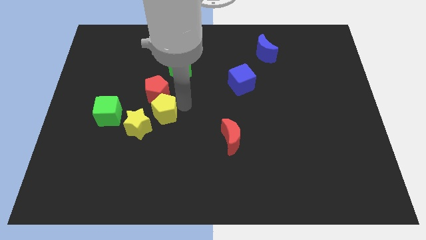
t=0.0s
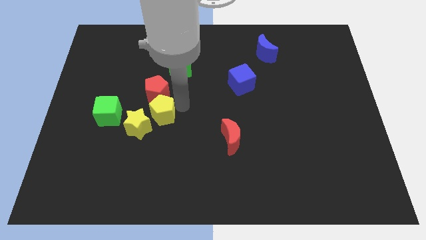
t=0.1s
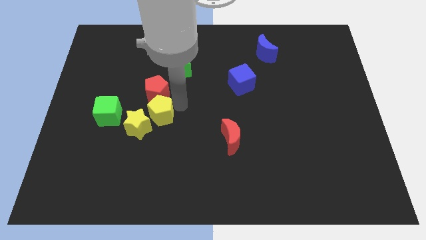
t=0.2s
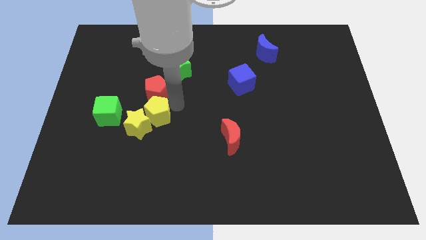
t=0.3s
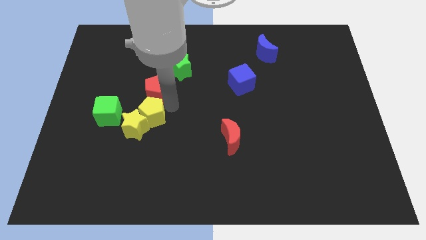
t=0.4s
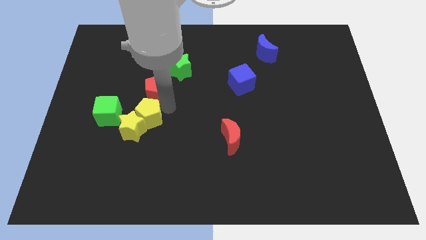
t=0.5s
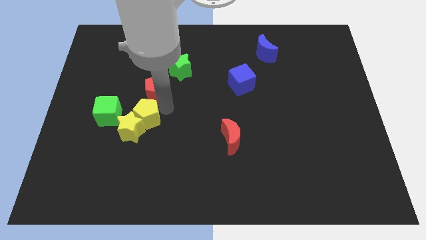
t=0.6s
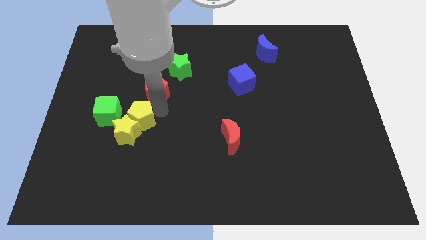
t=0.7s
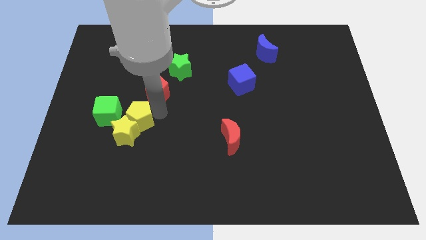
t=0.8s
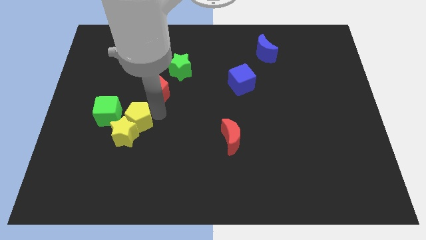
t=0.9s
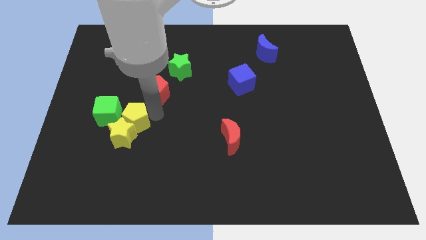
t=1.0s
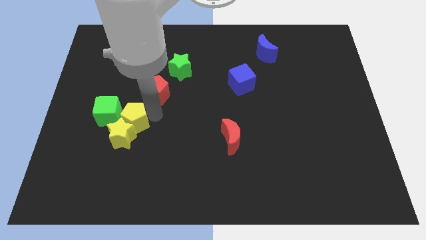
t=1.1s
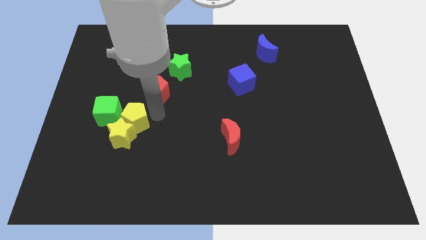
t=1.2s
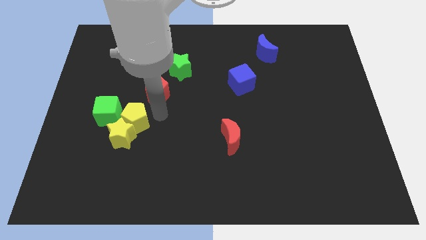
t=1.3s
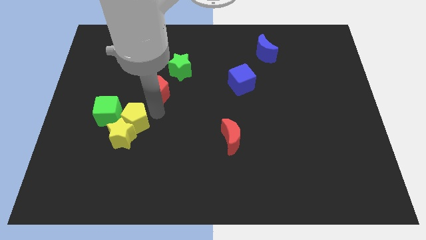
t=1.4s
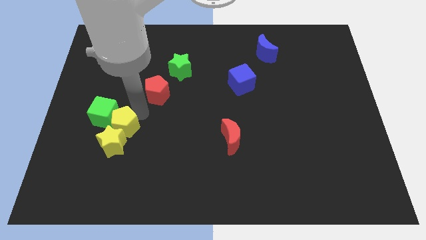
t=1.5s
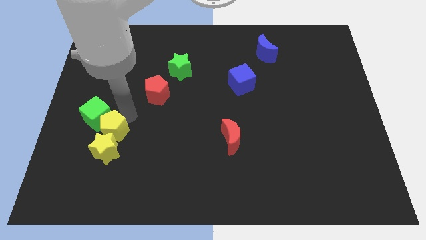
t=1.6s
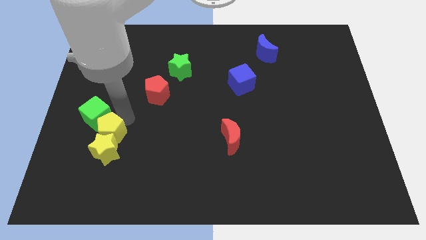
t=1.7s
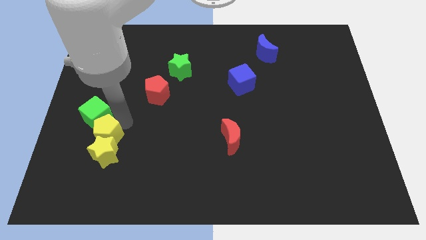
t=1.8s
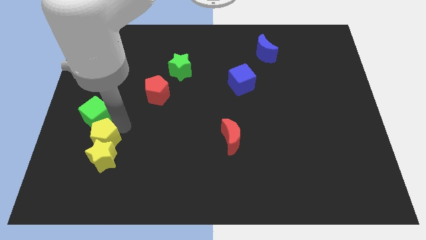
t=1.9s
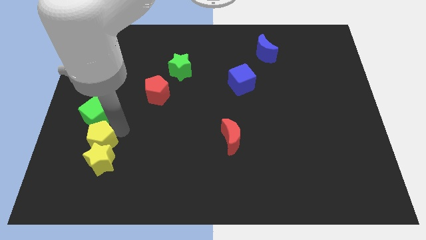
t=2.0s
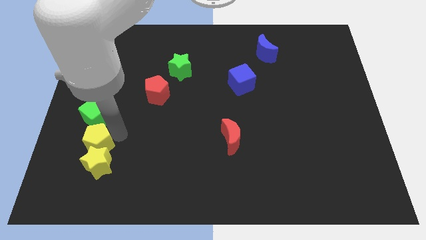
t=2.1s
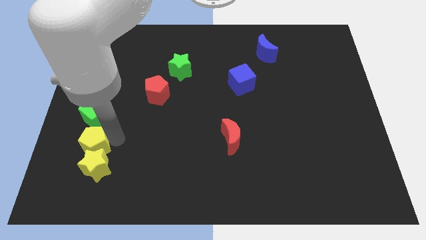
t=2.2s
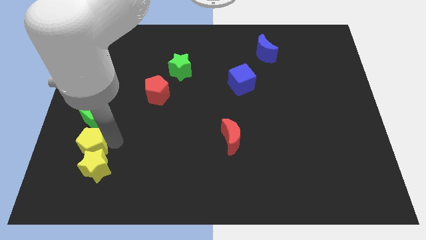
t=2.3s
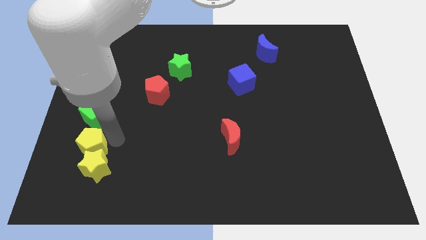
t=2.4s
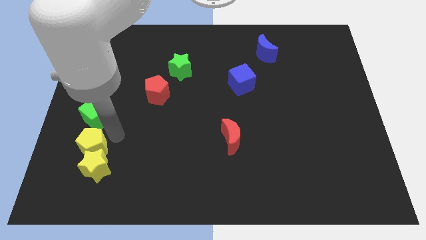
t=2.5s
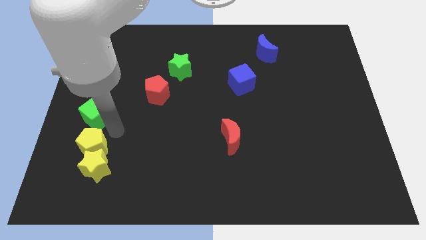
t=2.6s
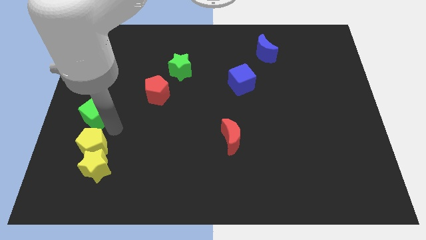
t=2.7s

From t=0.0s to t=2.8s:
push the yellow pentagon into yellow star

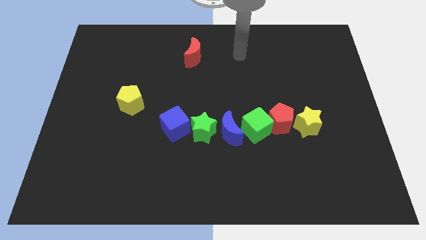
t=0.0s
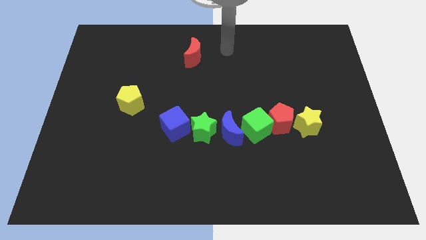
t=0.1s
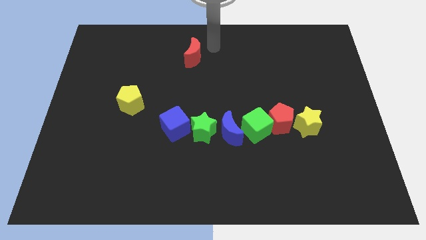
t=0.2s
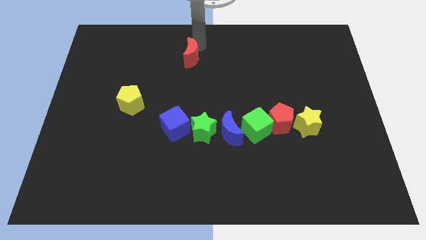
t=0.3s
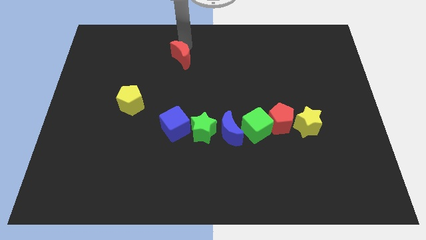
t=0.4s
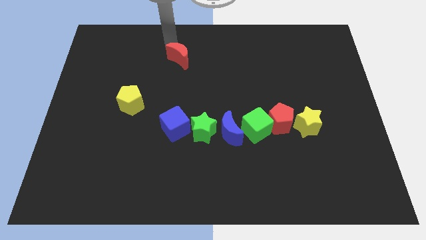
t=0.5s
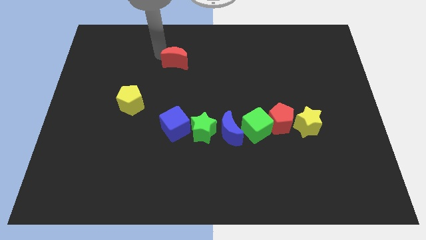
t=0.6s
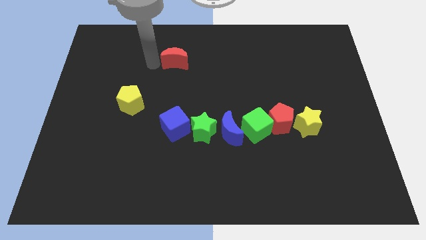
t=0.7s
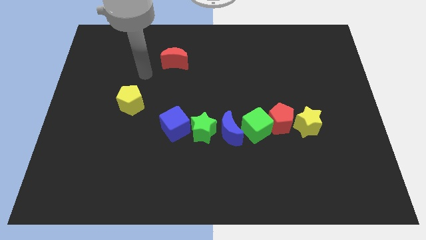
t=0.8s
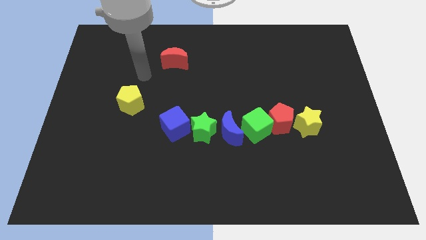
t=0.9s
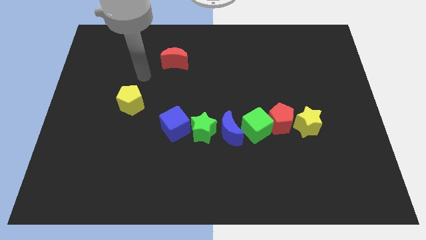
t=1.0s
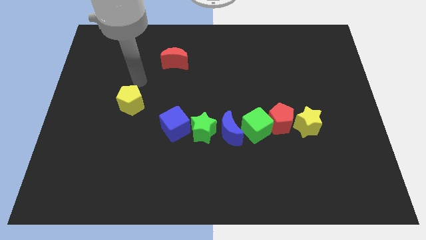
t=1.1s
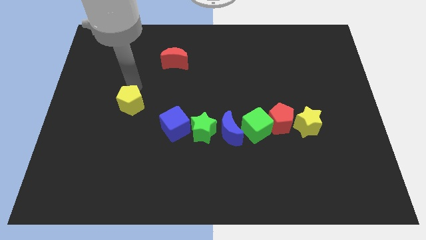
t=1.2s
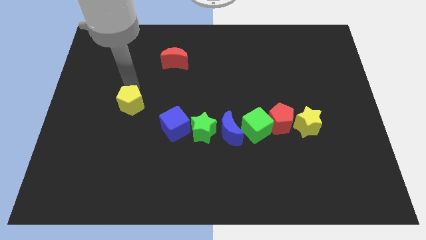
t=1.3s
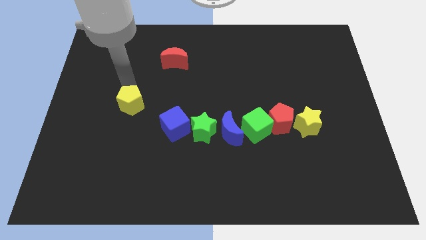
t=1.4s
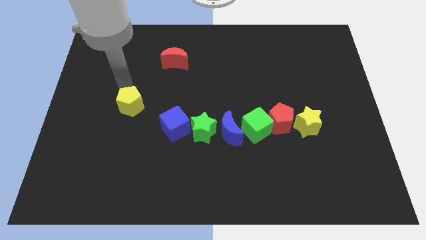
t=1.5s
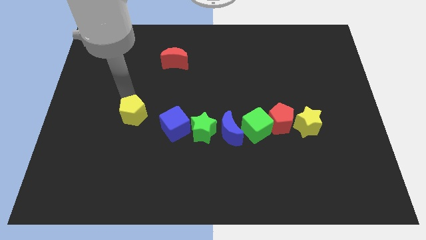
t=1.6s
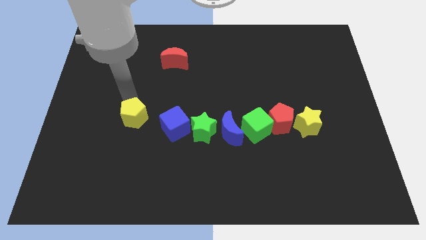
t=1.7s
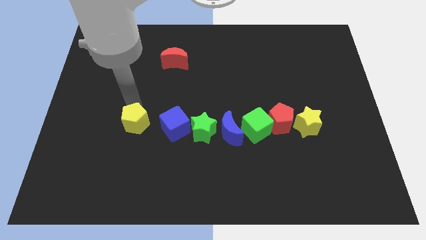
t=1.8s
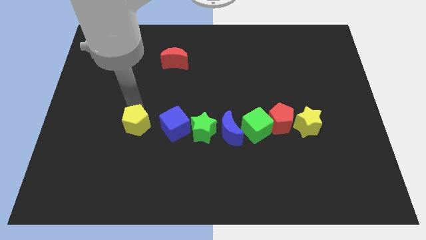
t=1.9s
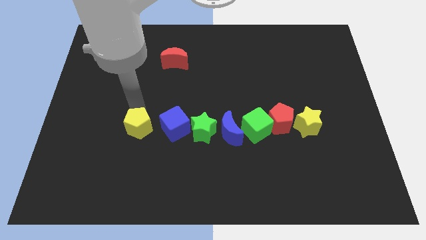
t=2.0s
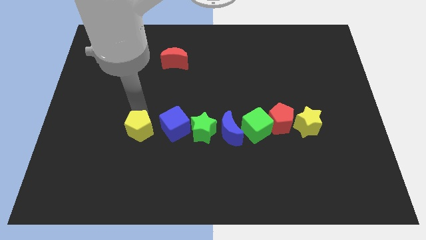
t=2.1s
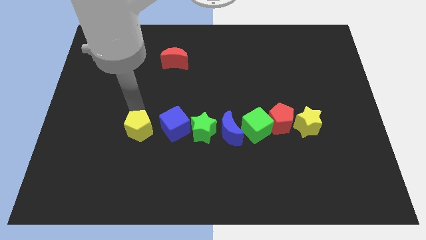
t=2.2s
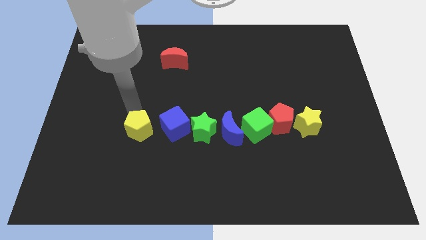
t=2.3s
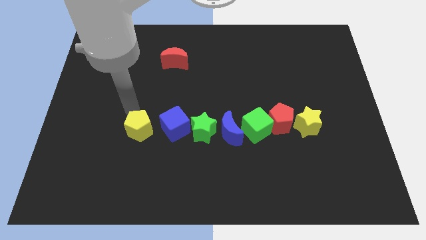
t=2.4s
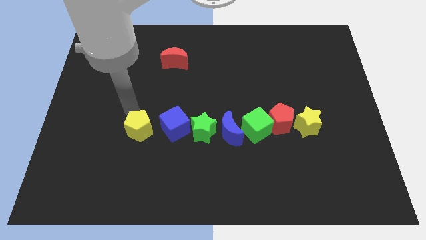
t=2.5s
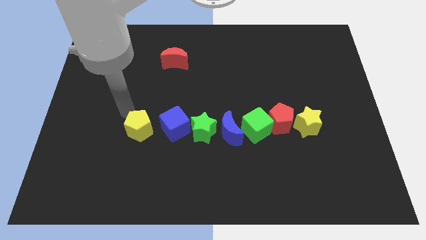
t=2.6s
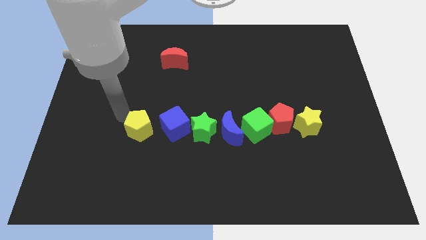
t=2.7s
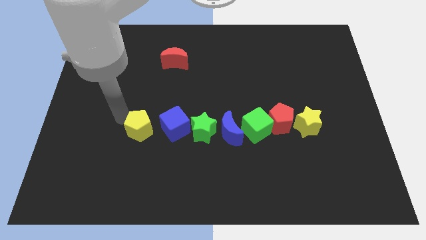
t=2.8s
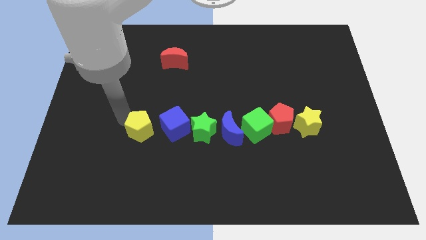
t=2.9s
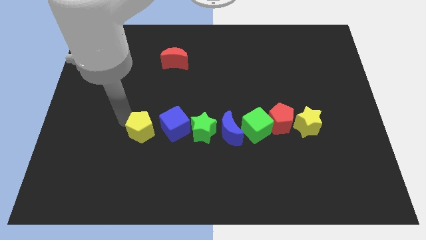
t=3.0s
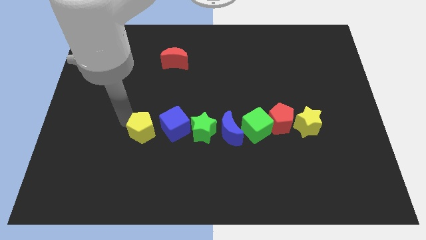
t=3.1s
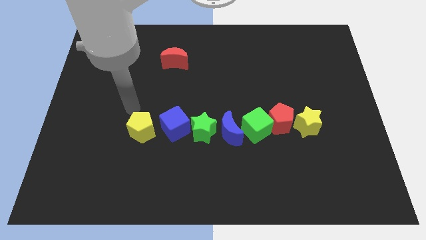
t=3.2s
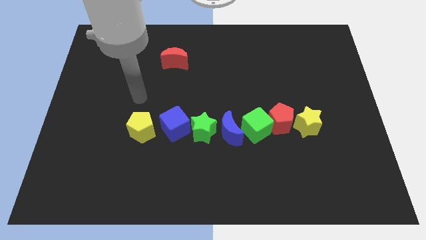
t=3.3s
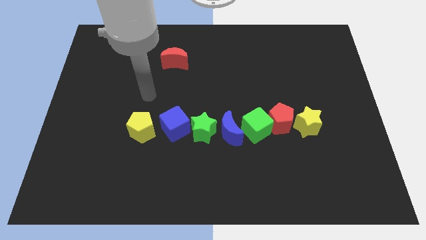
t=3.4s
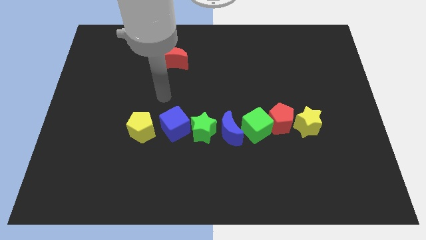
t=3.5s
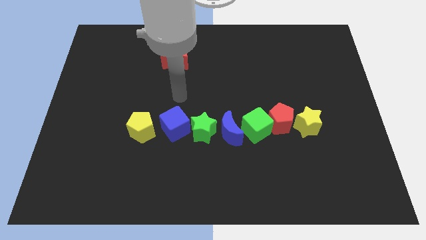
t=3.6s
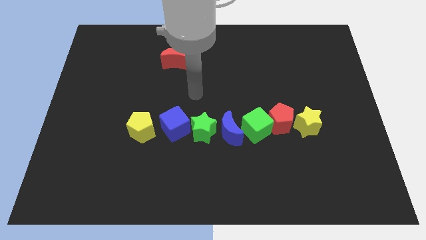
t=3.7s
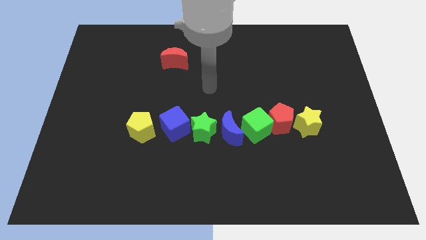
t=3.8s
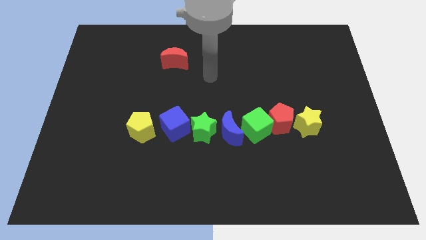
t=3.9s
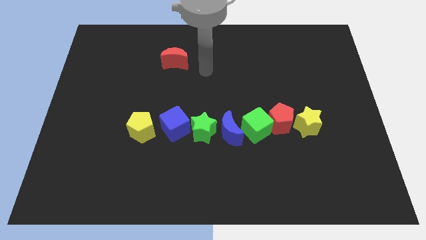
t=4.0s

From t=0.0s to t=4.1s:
place the yellow pentagon to the left of blue cube

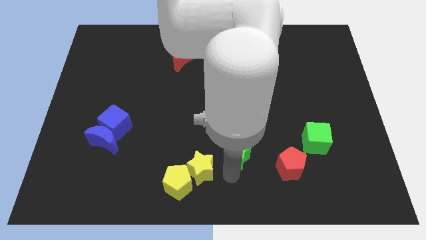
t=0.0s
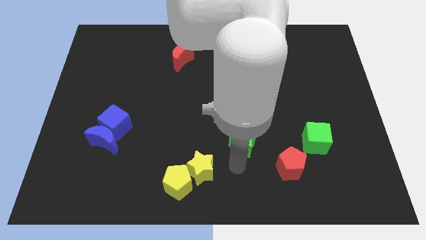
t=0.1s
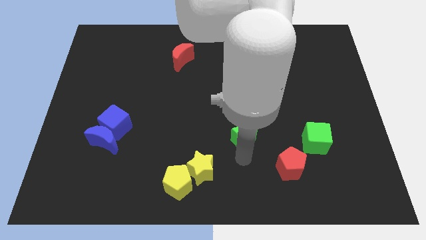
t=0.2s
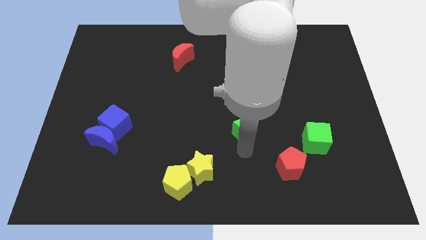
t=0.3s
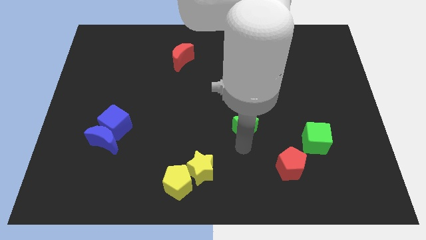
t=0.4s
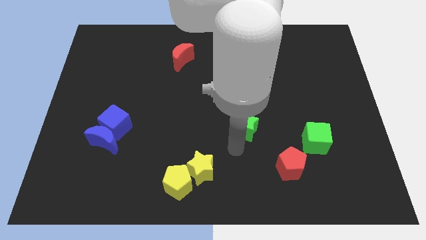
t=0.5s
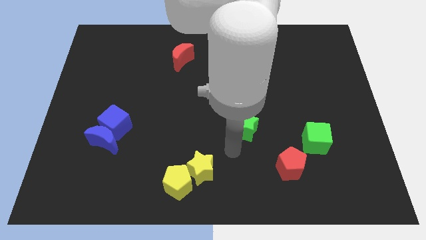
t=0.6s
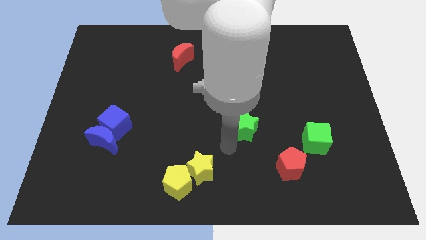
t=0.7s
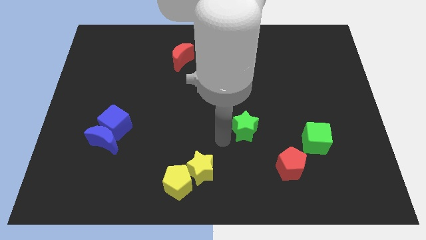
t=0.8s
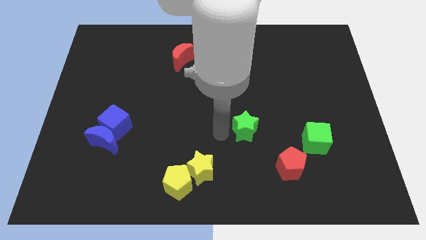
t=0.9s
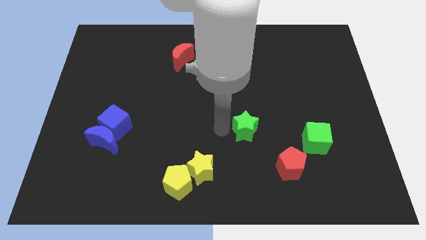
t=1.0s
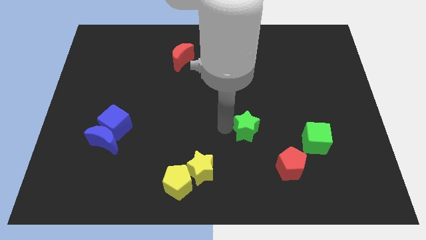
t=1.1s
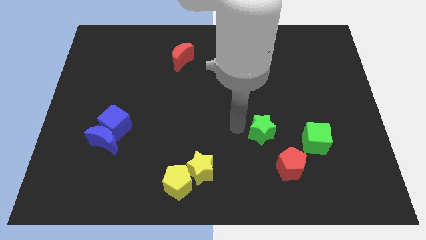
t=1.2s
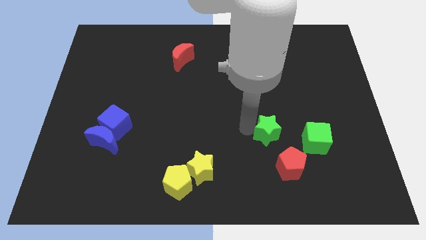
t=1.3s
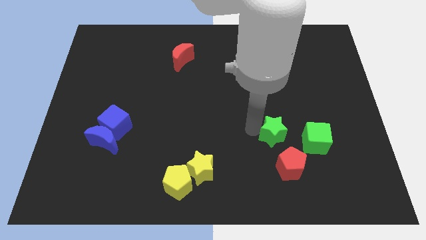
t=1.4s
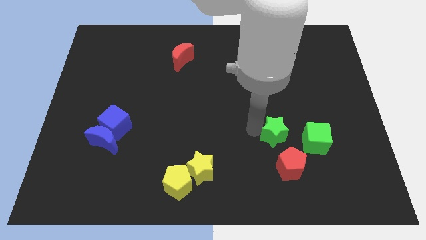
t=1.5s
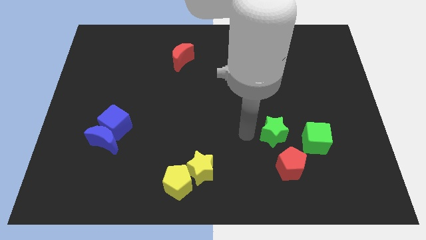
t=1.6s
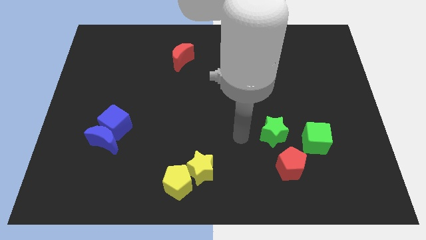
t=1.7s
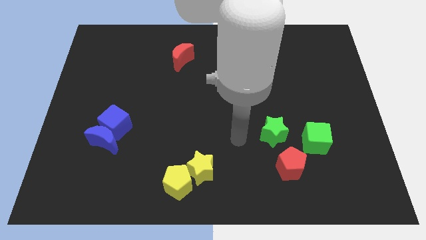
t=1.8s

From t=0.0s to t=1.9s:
place the green star adjacent to the green cube

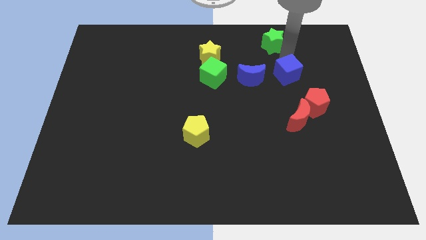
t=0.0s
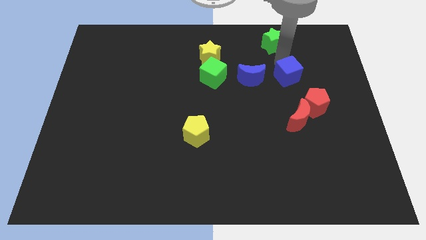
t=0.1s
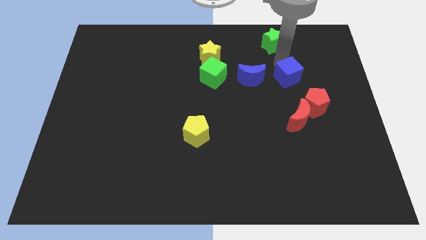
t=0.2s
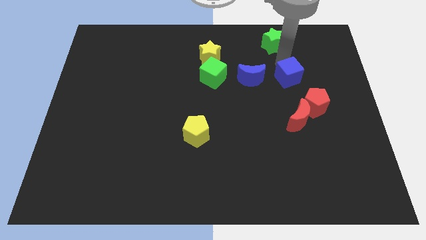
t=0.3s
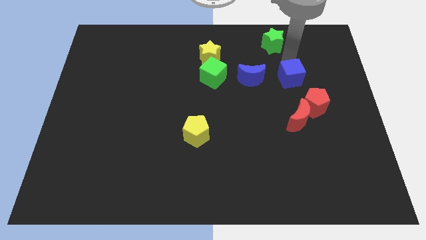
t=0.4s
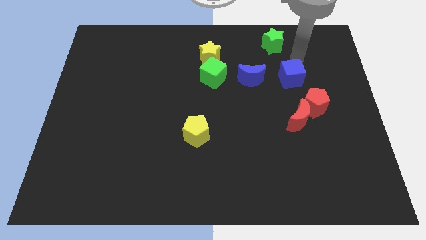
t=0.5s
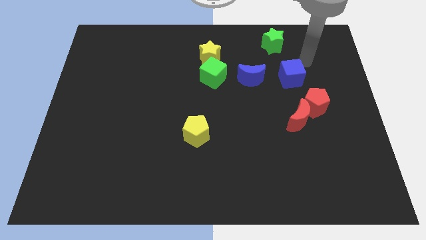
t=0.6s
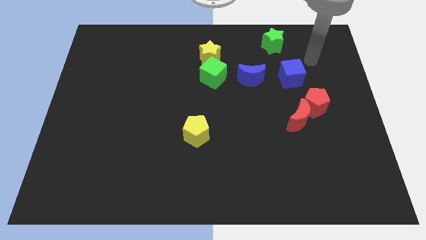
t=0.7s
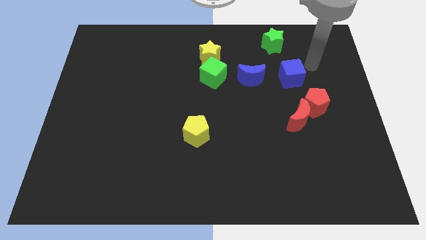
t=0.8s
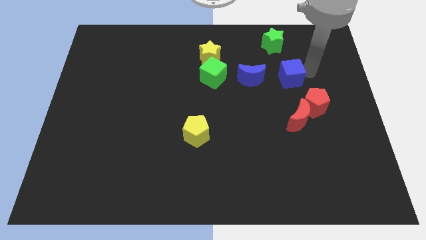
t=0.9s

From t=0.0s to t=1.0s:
move blue cube slightly downwards
